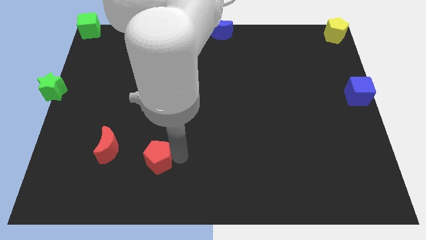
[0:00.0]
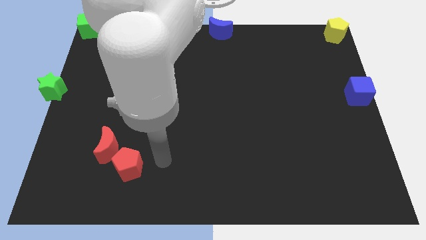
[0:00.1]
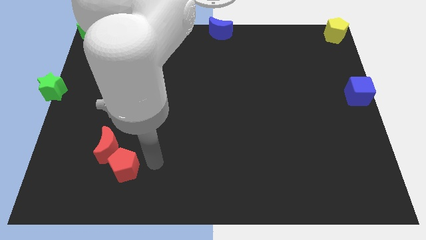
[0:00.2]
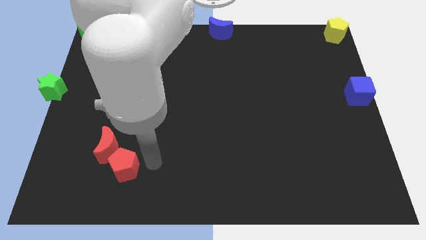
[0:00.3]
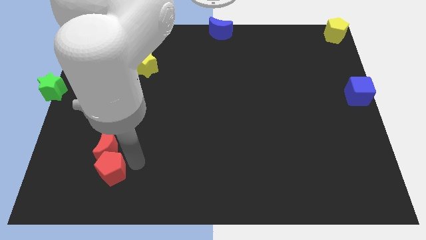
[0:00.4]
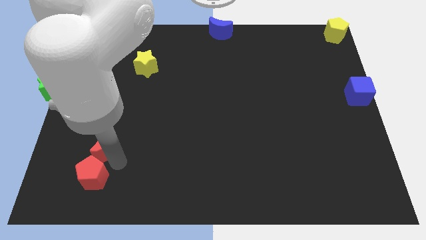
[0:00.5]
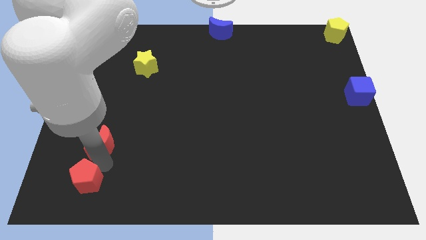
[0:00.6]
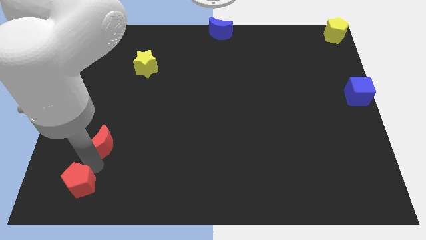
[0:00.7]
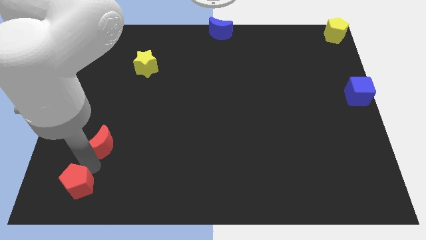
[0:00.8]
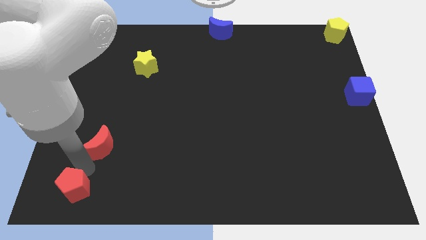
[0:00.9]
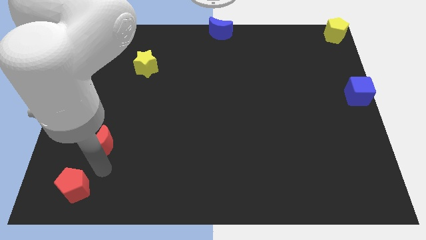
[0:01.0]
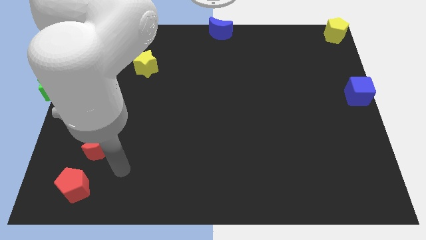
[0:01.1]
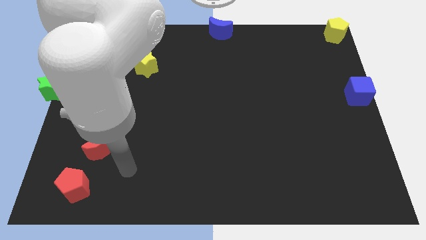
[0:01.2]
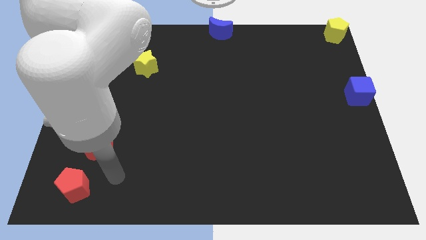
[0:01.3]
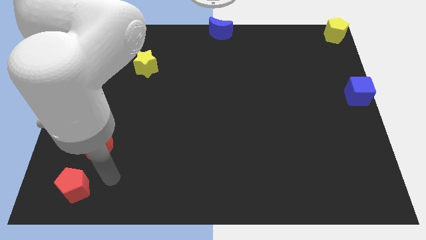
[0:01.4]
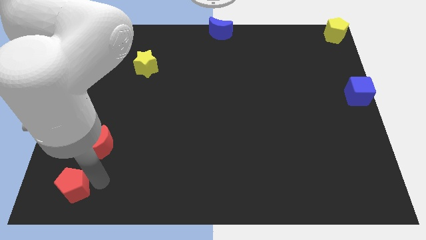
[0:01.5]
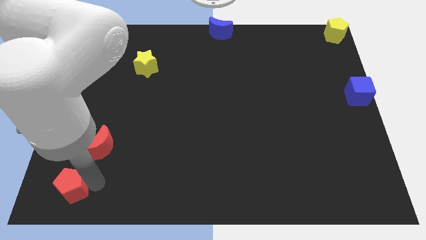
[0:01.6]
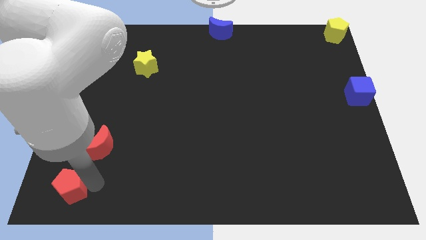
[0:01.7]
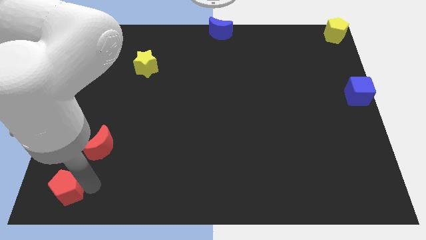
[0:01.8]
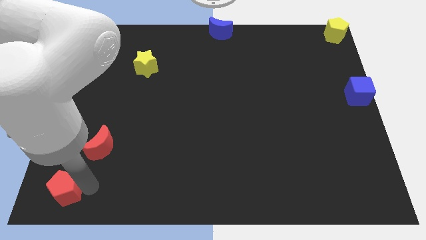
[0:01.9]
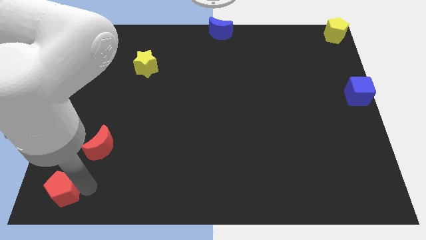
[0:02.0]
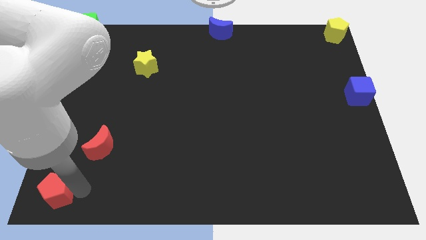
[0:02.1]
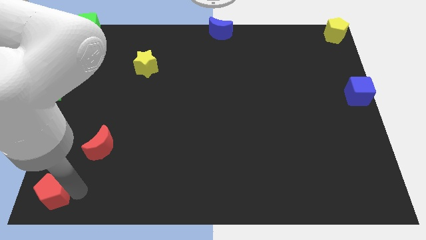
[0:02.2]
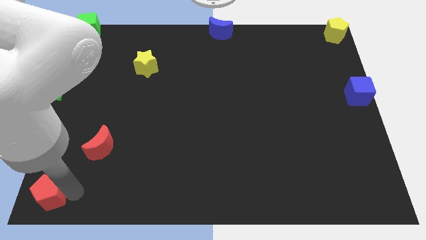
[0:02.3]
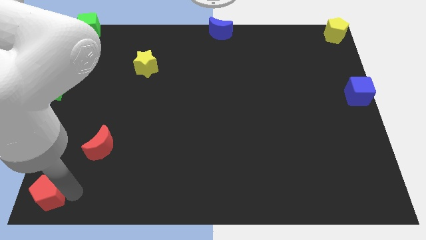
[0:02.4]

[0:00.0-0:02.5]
move the red pentagon diagonally bottom left to the red moon

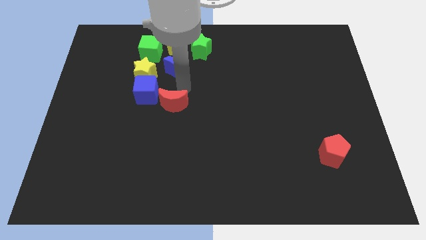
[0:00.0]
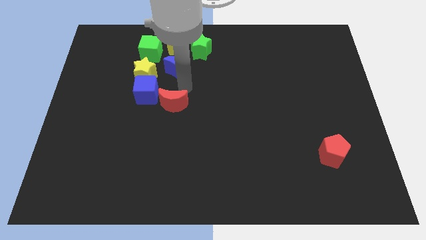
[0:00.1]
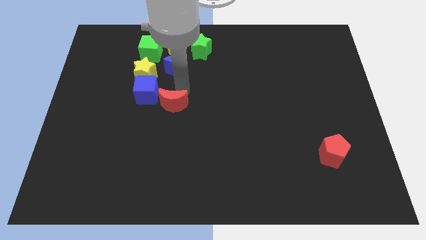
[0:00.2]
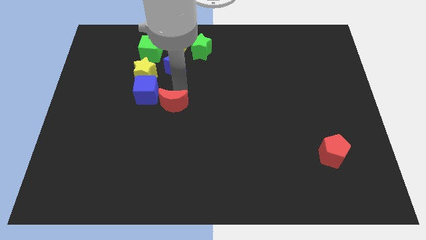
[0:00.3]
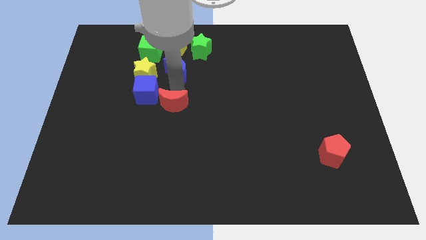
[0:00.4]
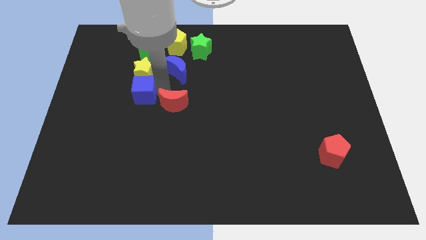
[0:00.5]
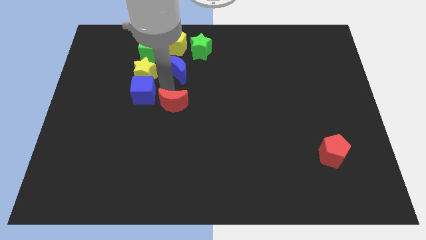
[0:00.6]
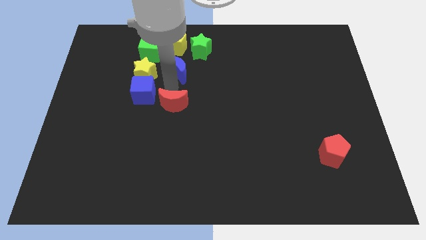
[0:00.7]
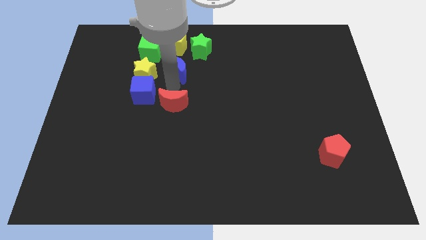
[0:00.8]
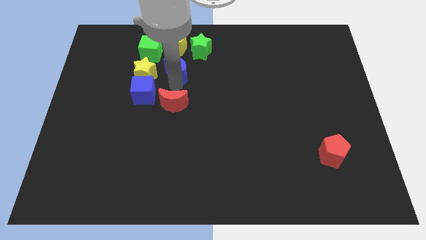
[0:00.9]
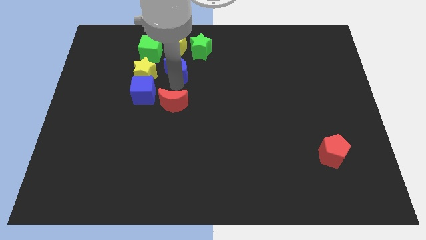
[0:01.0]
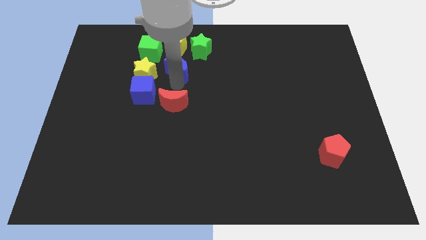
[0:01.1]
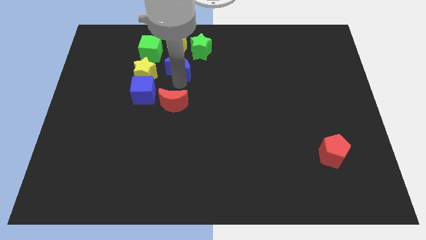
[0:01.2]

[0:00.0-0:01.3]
slightly move the blue cube towards the left

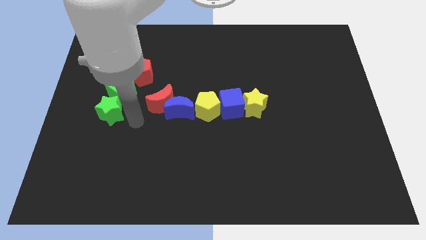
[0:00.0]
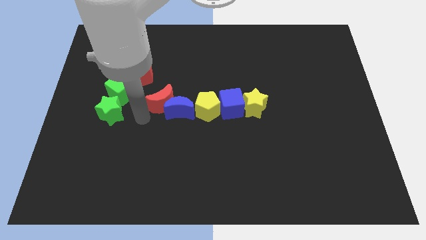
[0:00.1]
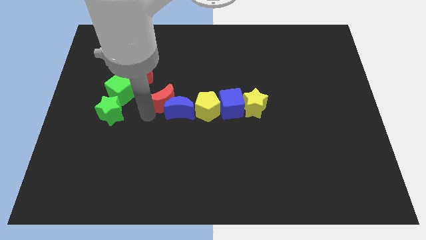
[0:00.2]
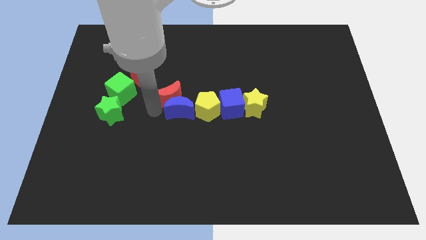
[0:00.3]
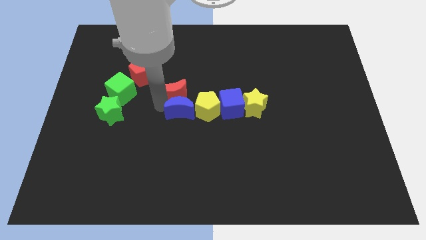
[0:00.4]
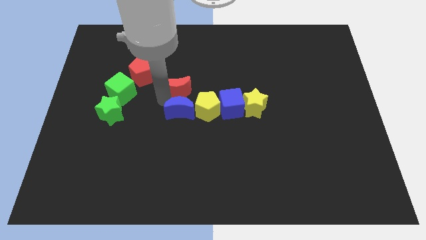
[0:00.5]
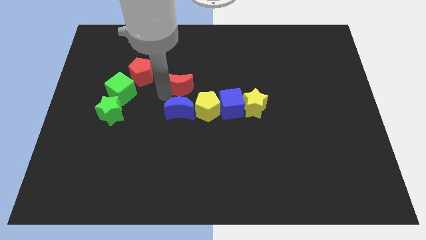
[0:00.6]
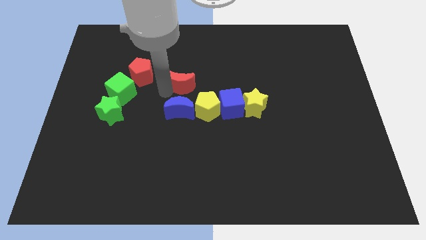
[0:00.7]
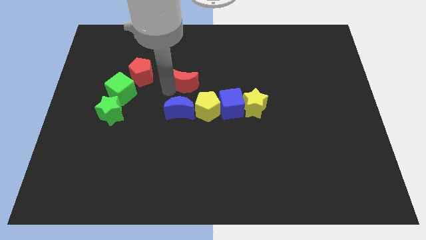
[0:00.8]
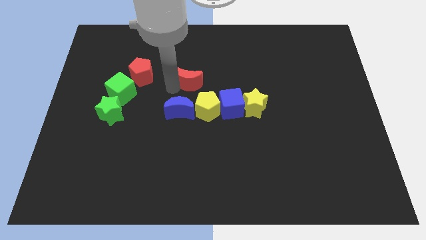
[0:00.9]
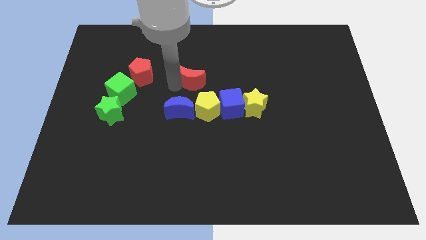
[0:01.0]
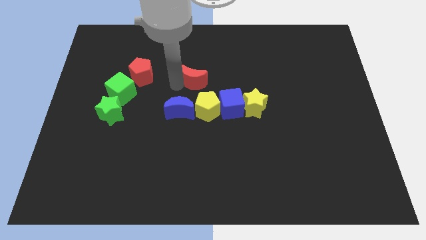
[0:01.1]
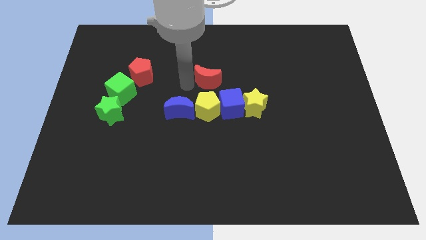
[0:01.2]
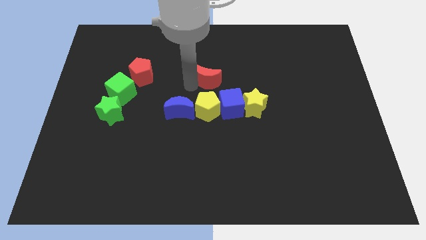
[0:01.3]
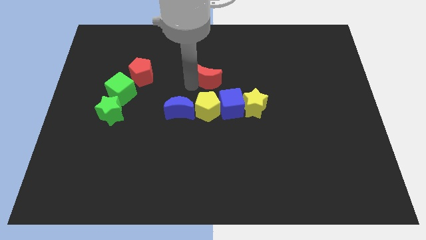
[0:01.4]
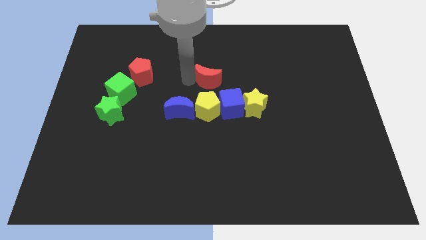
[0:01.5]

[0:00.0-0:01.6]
separate the red crescent from the blue crescent

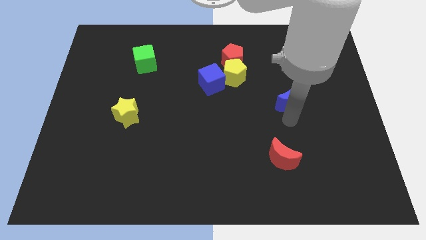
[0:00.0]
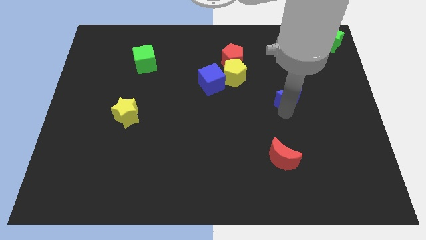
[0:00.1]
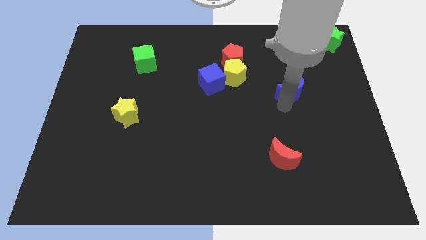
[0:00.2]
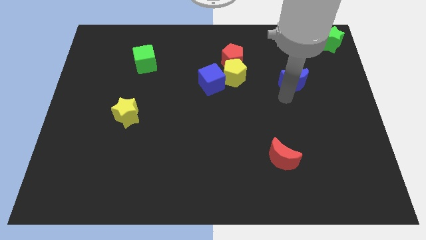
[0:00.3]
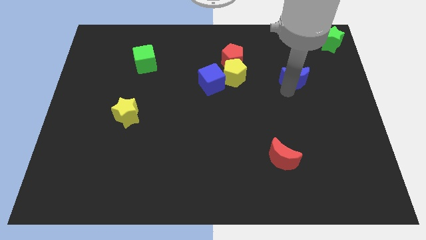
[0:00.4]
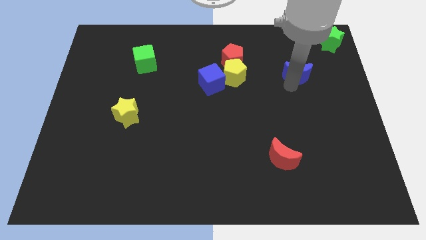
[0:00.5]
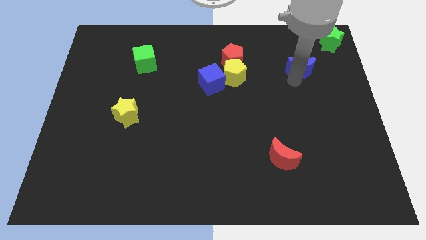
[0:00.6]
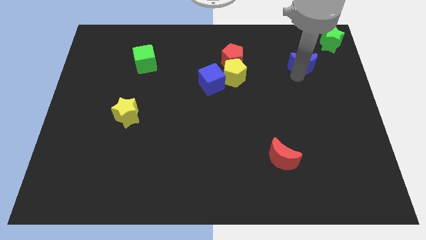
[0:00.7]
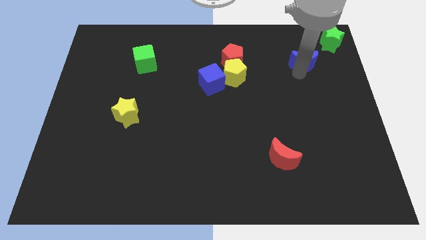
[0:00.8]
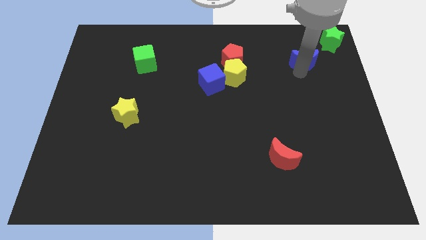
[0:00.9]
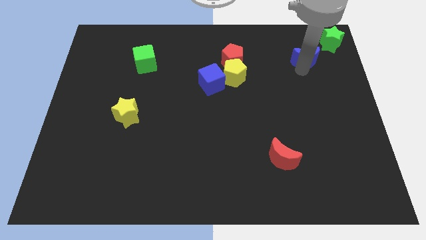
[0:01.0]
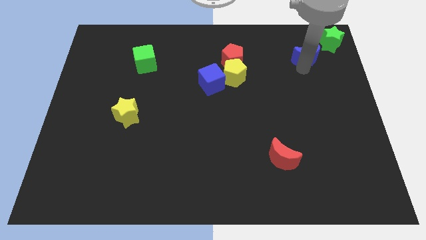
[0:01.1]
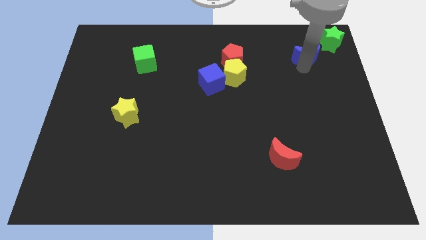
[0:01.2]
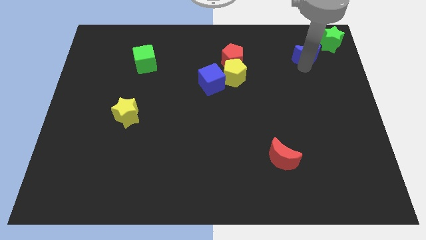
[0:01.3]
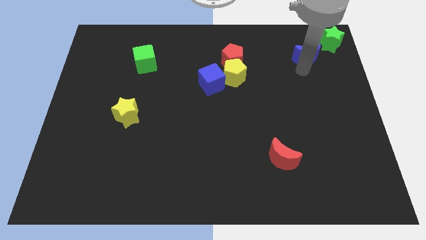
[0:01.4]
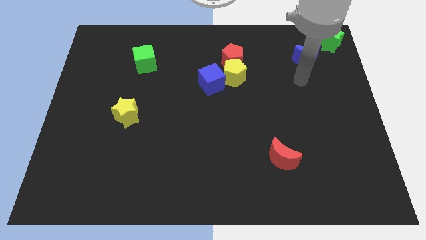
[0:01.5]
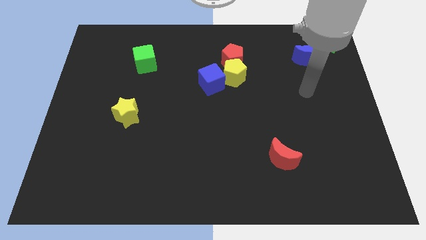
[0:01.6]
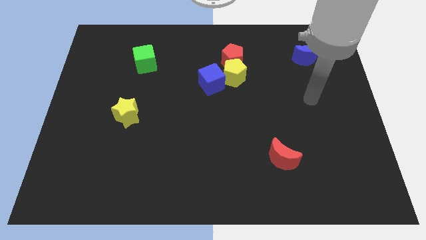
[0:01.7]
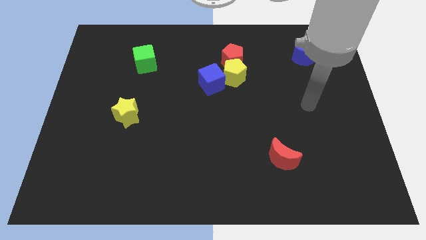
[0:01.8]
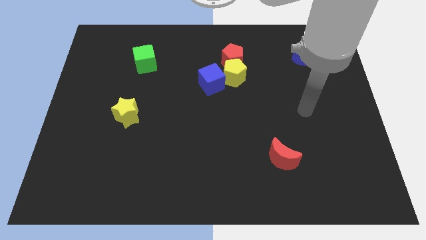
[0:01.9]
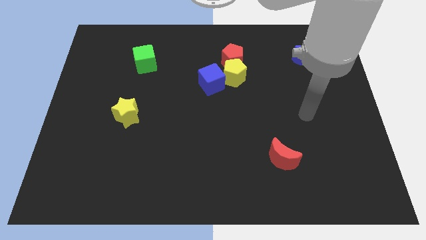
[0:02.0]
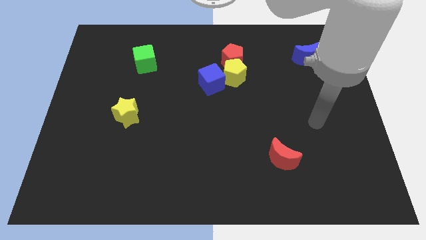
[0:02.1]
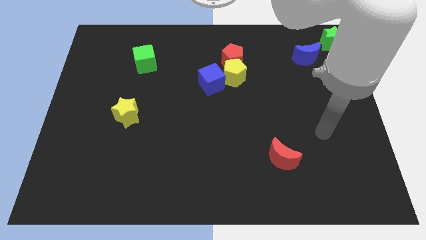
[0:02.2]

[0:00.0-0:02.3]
move the blue crescent to the top right of the board

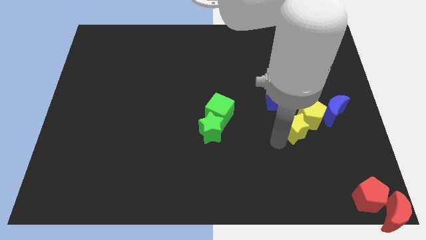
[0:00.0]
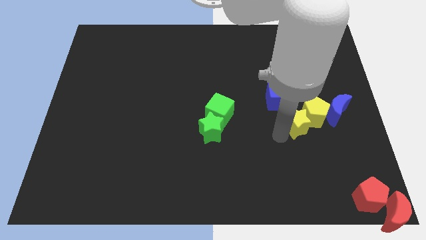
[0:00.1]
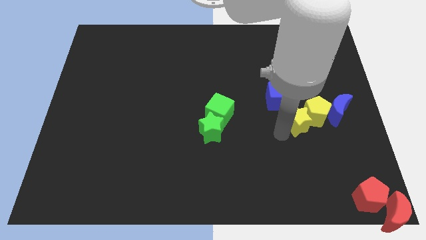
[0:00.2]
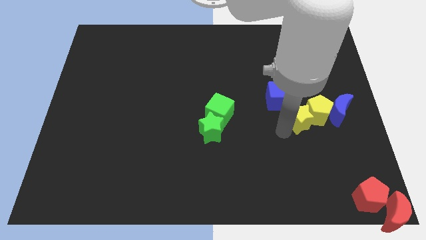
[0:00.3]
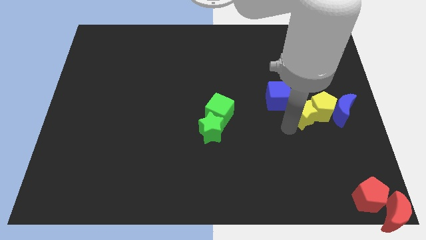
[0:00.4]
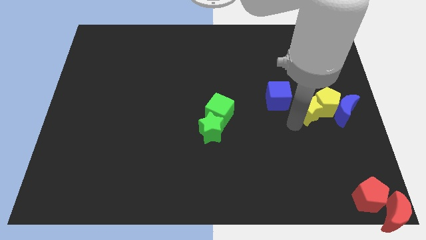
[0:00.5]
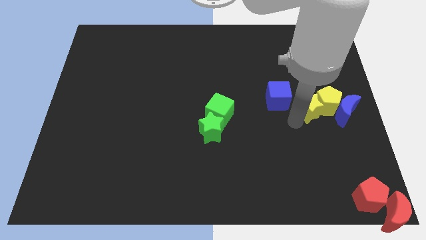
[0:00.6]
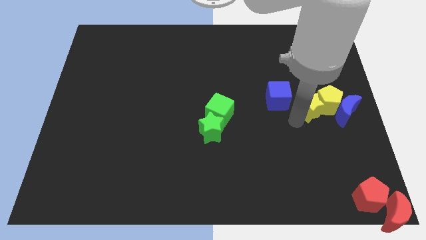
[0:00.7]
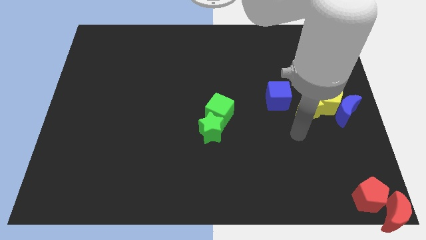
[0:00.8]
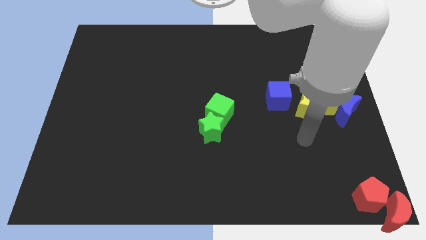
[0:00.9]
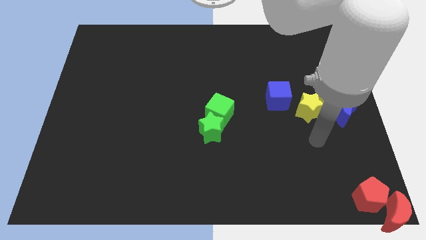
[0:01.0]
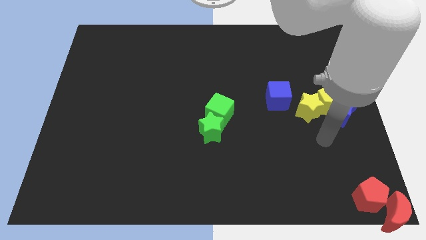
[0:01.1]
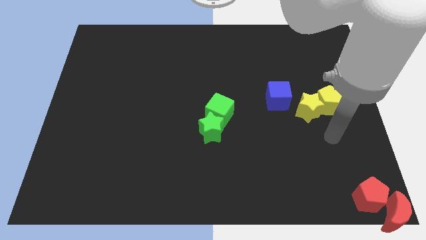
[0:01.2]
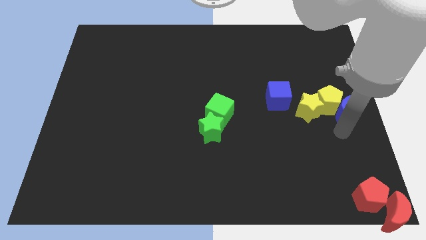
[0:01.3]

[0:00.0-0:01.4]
place the yellow blocks in between the blue blocks
